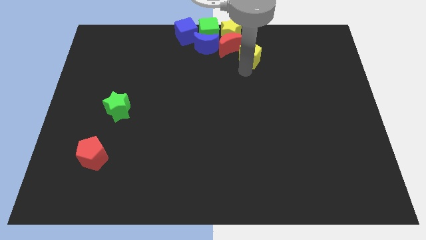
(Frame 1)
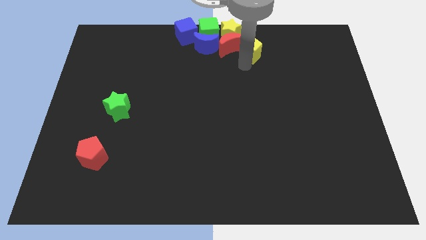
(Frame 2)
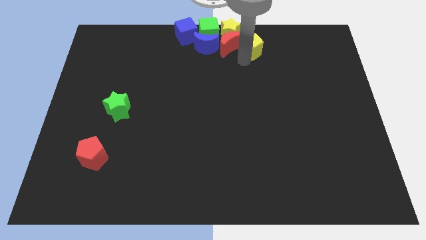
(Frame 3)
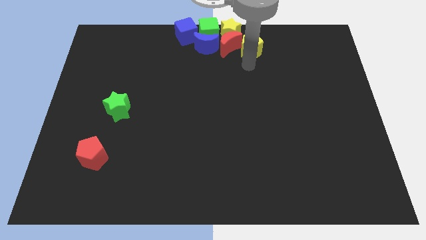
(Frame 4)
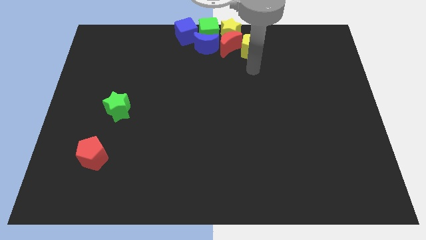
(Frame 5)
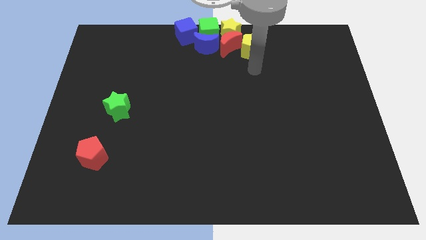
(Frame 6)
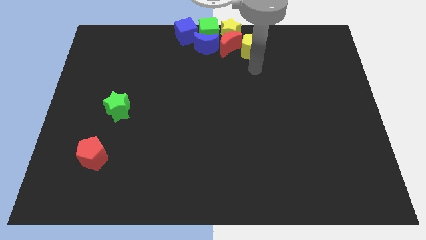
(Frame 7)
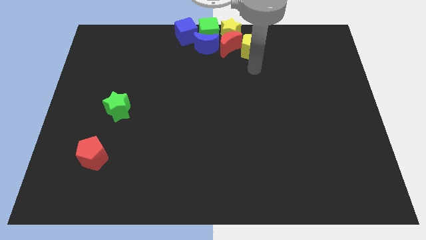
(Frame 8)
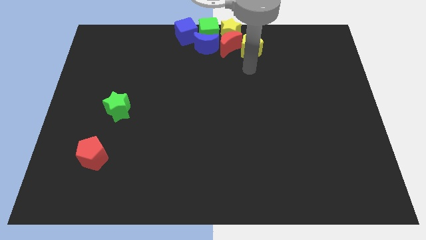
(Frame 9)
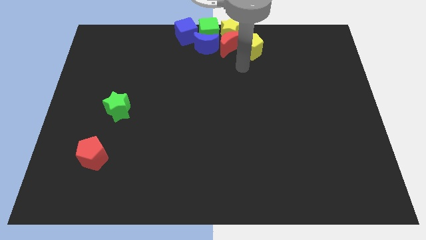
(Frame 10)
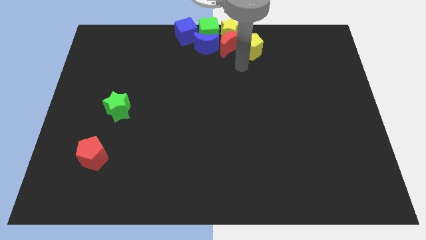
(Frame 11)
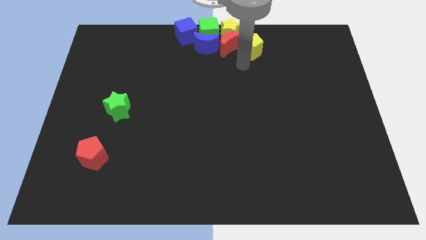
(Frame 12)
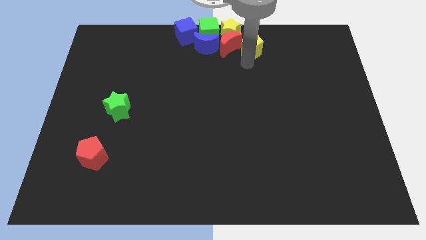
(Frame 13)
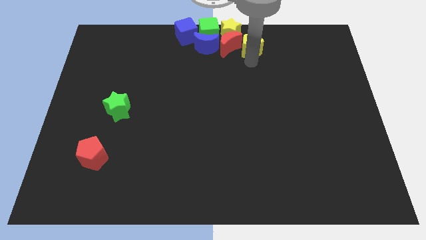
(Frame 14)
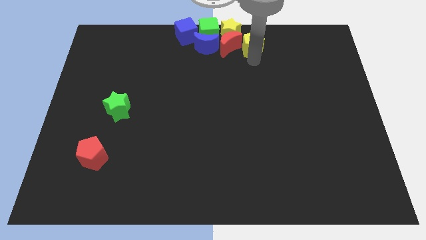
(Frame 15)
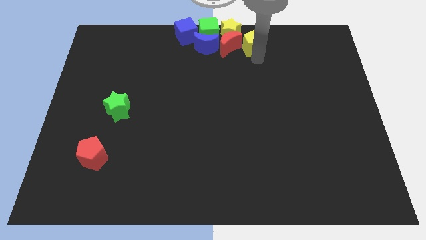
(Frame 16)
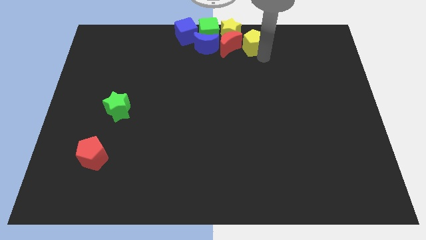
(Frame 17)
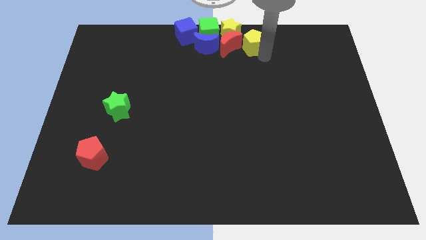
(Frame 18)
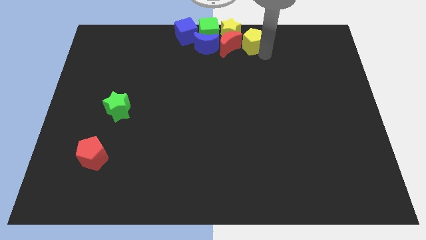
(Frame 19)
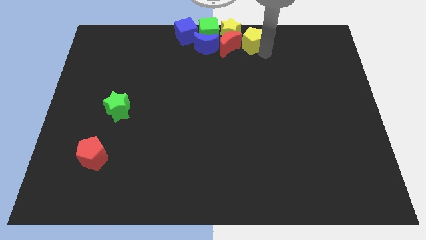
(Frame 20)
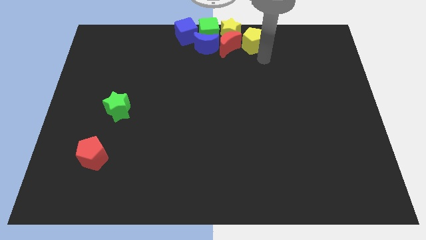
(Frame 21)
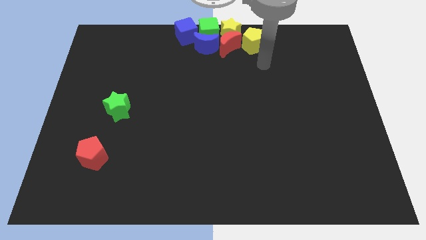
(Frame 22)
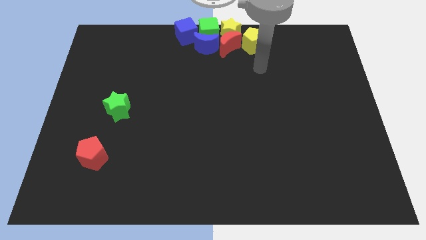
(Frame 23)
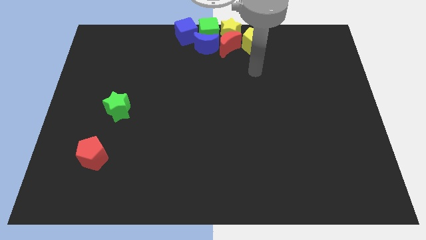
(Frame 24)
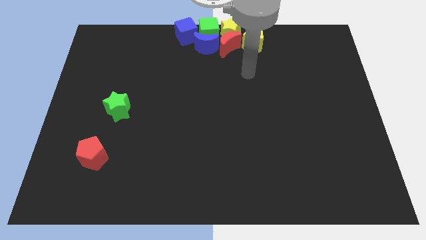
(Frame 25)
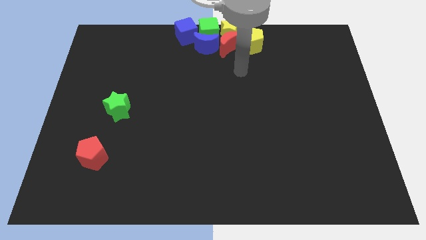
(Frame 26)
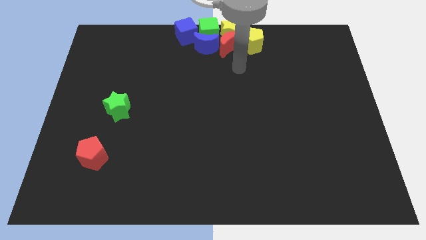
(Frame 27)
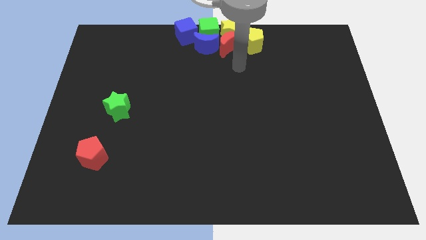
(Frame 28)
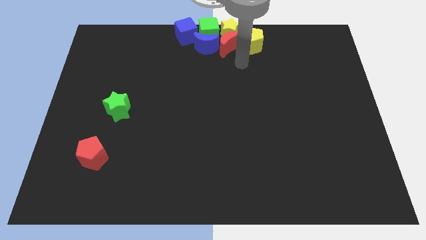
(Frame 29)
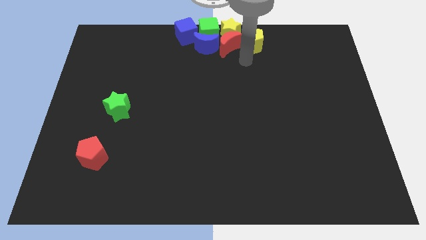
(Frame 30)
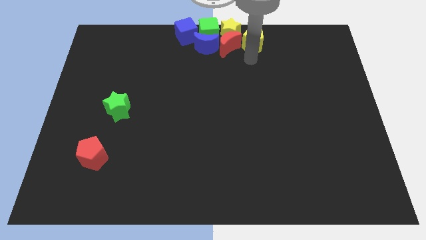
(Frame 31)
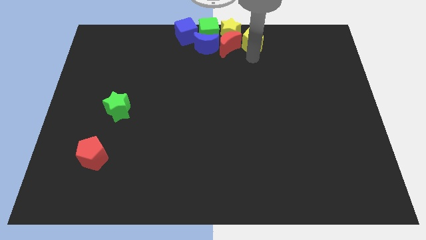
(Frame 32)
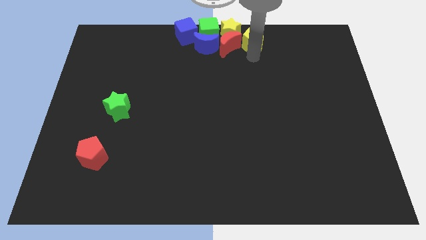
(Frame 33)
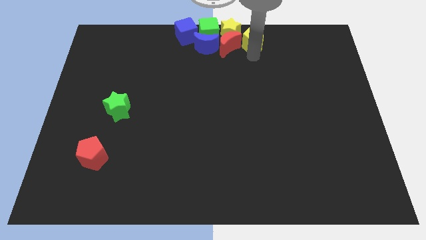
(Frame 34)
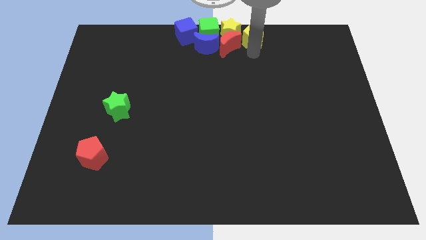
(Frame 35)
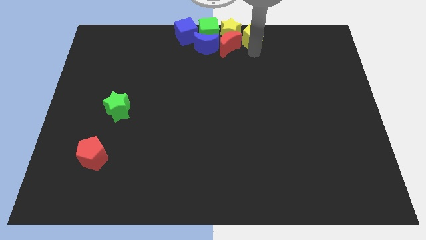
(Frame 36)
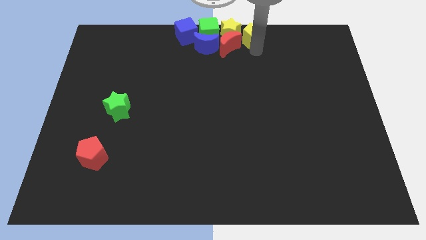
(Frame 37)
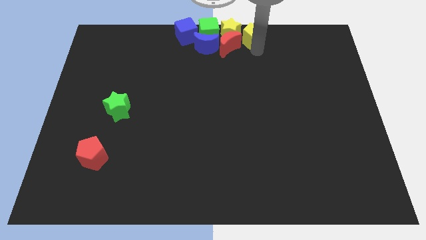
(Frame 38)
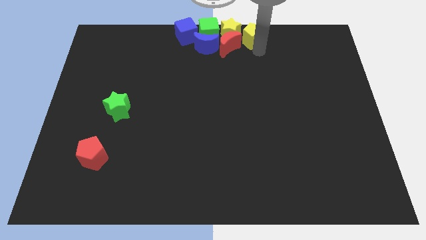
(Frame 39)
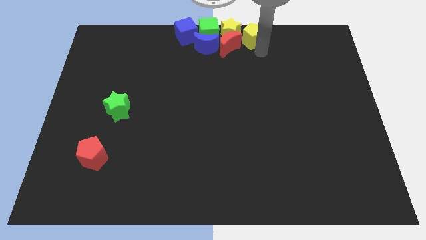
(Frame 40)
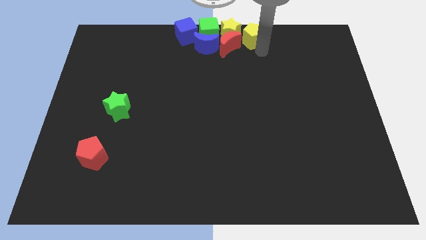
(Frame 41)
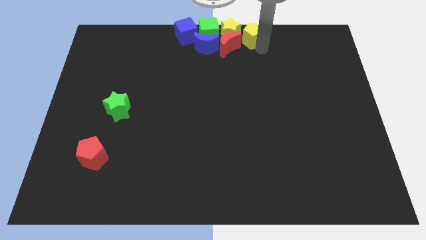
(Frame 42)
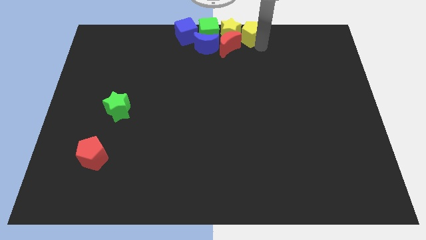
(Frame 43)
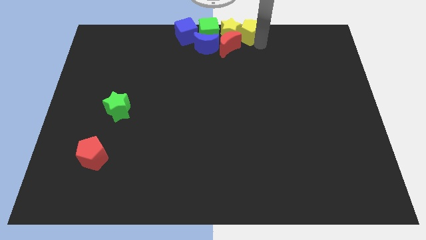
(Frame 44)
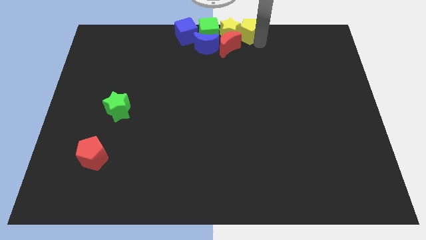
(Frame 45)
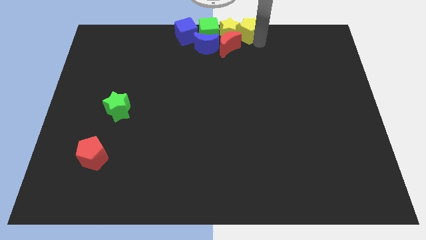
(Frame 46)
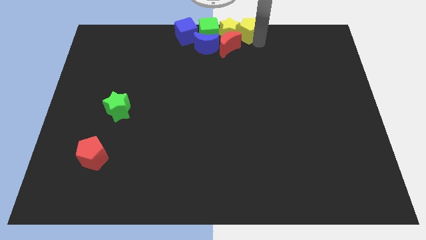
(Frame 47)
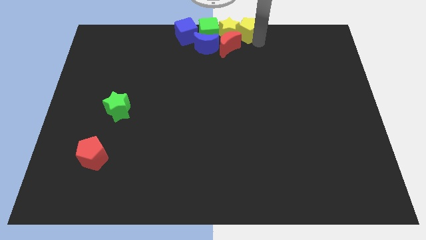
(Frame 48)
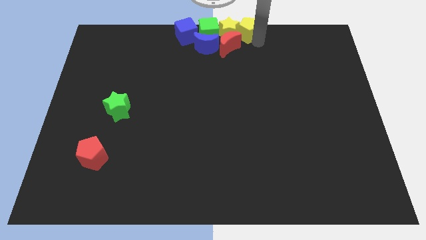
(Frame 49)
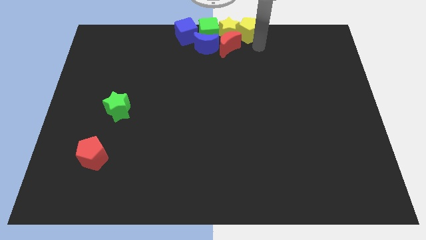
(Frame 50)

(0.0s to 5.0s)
adjust the yellow pentagon to the top center

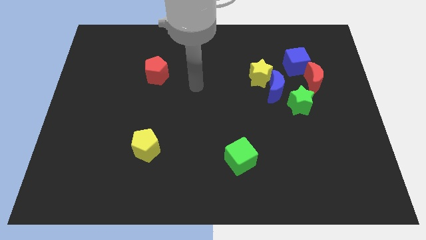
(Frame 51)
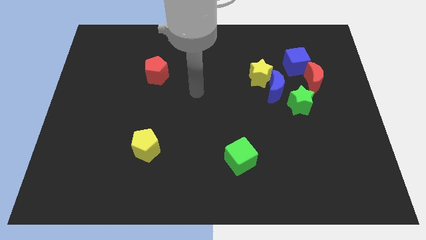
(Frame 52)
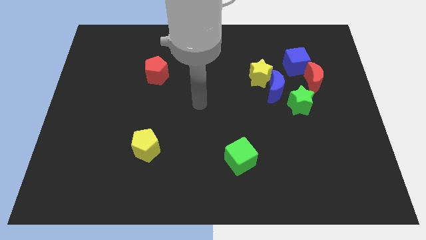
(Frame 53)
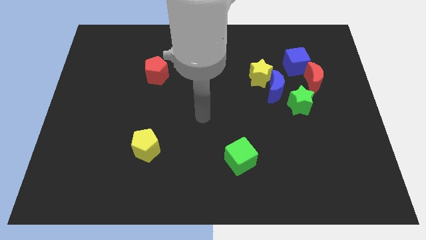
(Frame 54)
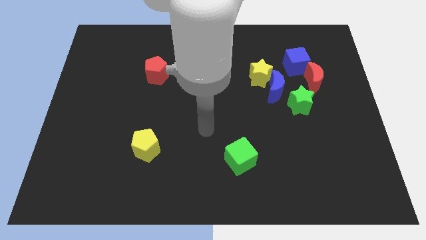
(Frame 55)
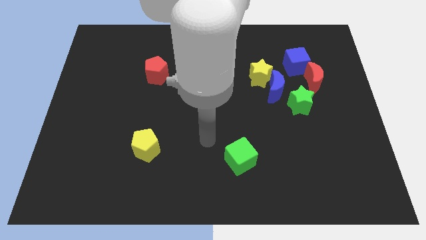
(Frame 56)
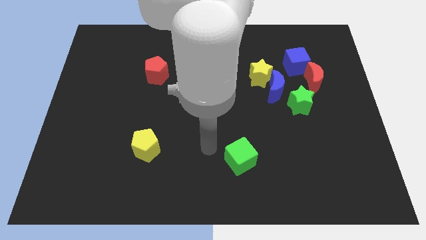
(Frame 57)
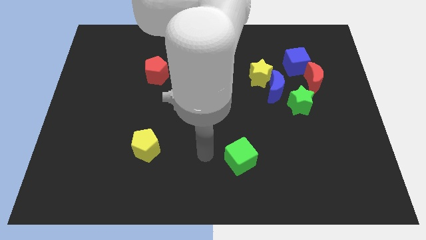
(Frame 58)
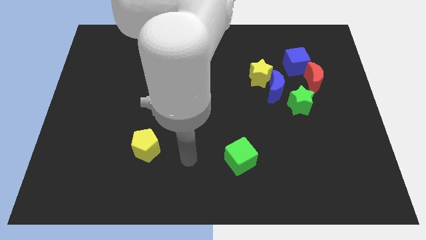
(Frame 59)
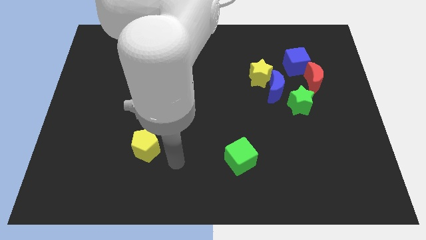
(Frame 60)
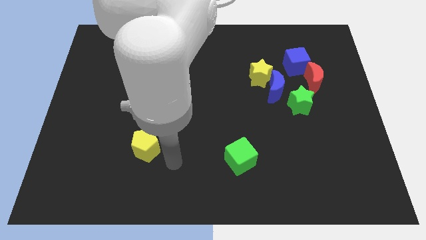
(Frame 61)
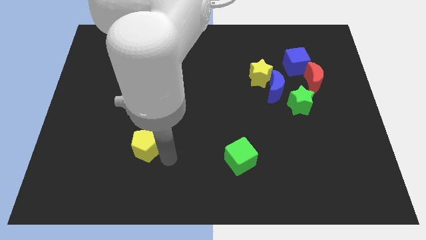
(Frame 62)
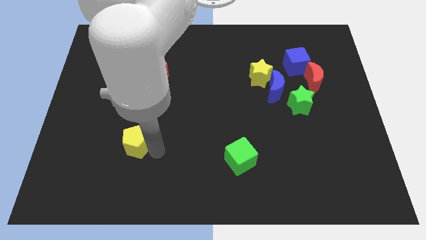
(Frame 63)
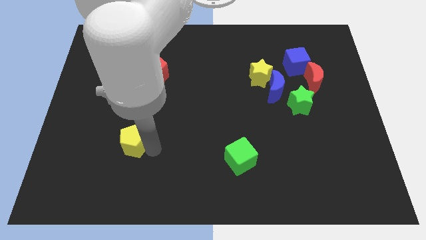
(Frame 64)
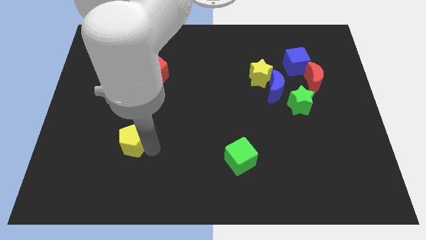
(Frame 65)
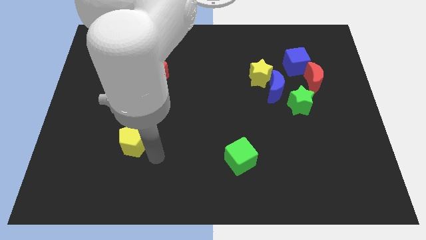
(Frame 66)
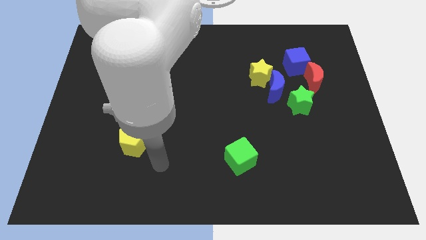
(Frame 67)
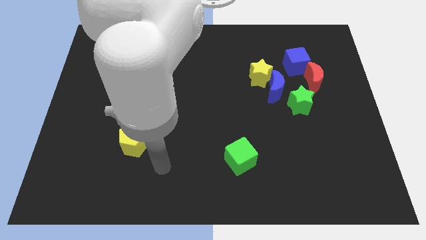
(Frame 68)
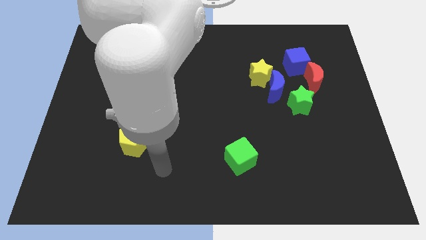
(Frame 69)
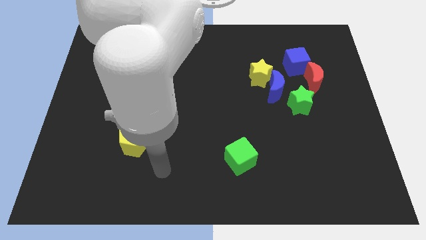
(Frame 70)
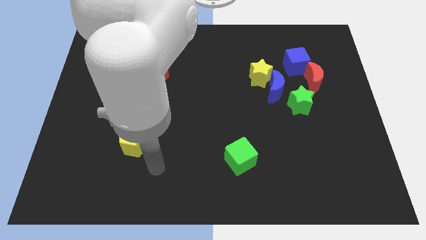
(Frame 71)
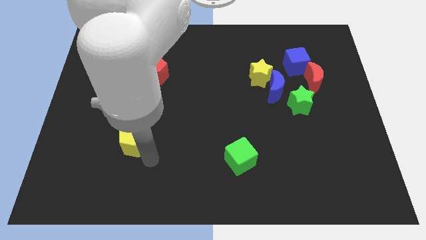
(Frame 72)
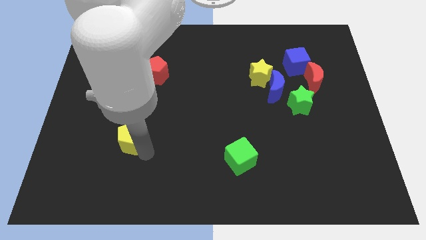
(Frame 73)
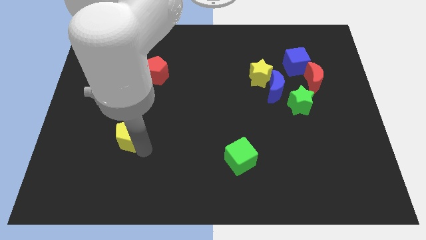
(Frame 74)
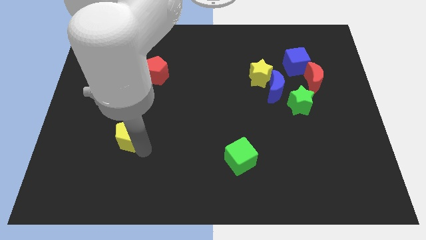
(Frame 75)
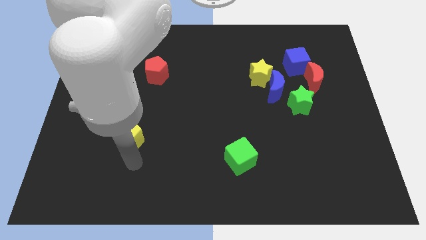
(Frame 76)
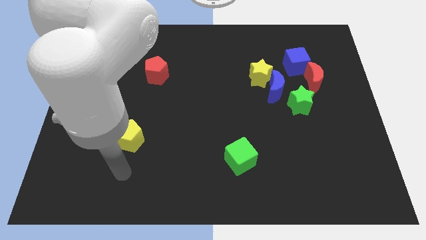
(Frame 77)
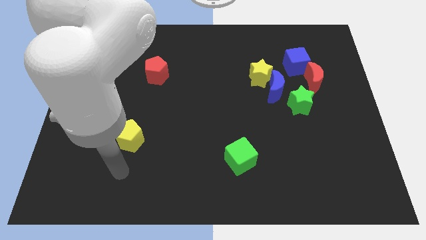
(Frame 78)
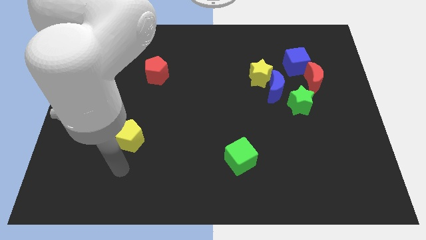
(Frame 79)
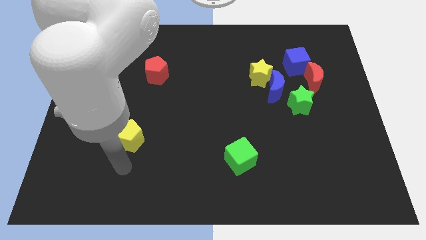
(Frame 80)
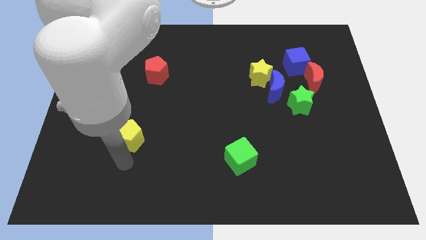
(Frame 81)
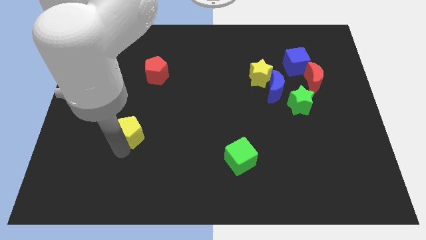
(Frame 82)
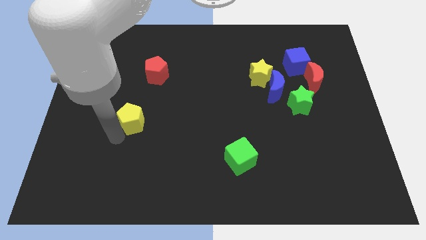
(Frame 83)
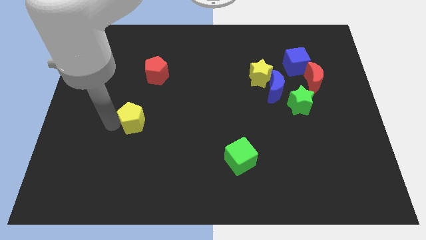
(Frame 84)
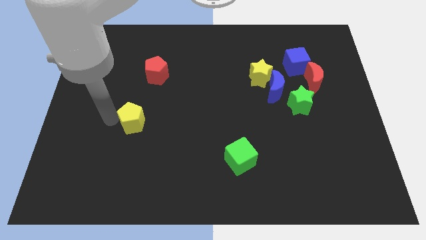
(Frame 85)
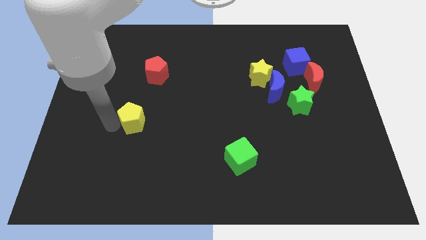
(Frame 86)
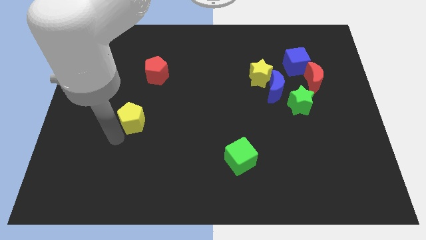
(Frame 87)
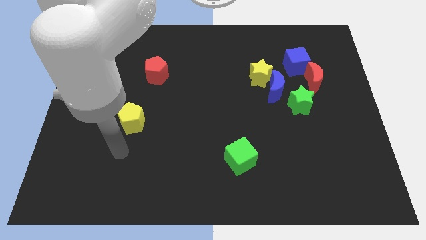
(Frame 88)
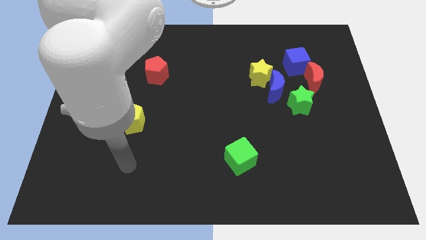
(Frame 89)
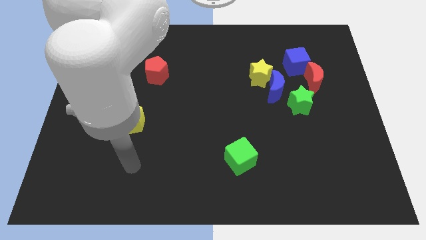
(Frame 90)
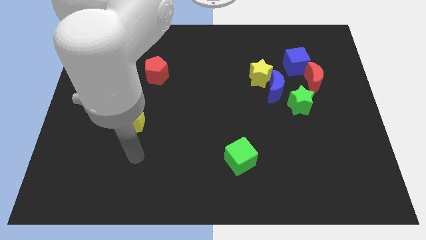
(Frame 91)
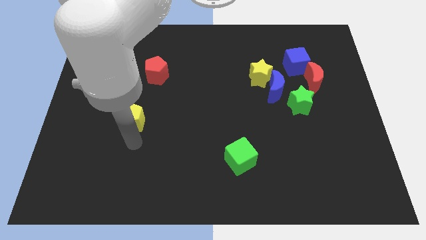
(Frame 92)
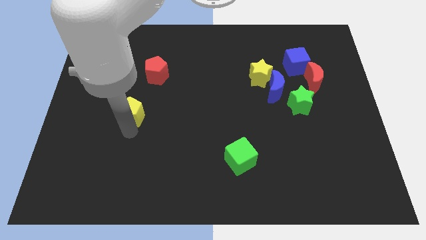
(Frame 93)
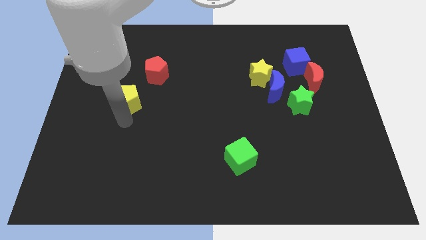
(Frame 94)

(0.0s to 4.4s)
place the yellow pentagon diagonal to the red pentagon
